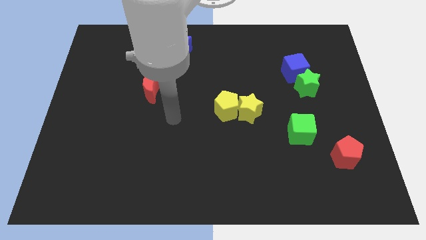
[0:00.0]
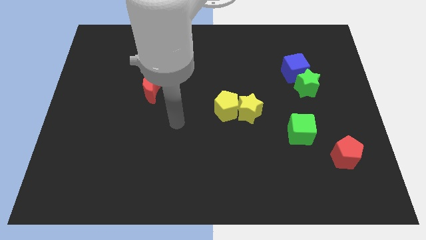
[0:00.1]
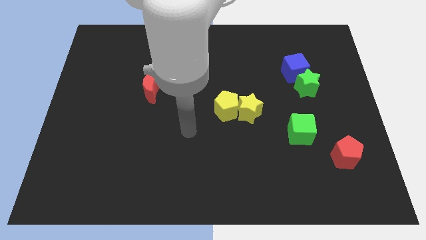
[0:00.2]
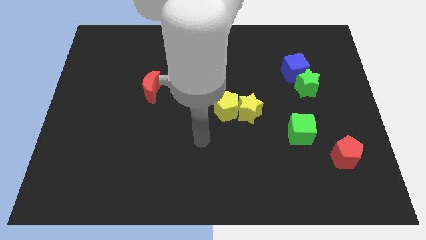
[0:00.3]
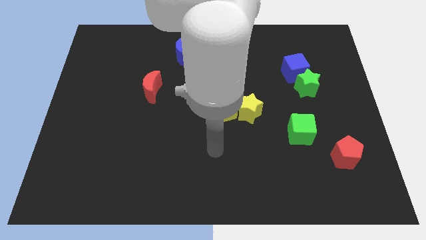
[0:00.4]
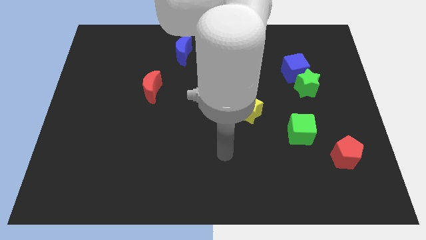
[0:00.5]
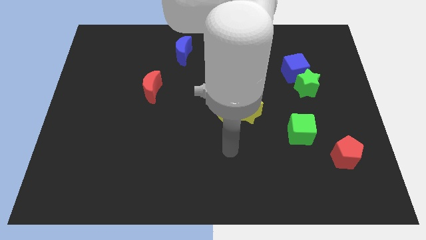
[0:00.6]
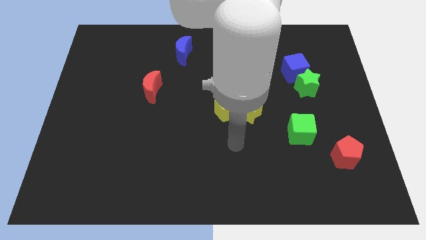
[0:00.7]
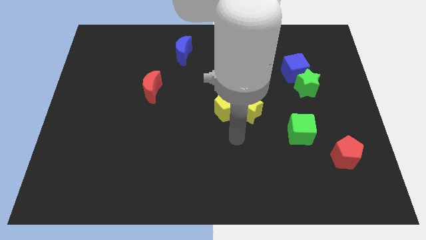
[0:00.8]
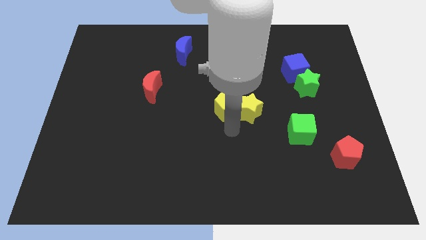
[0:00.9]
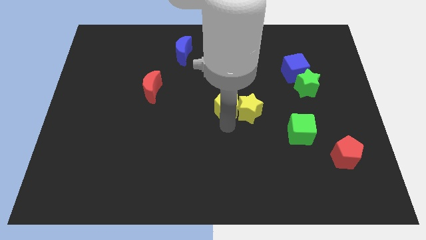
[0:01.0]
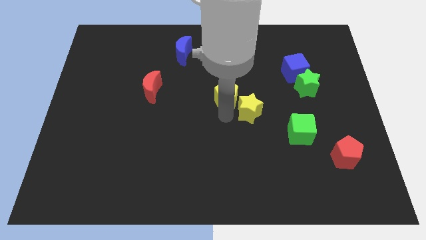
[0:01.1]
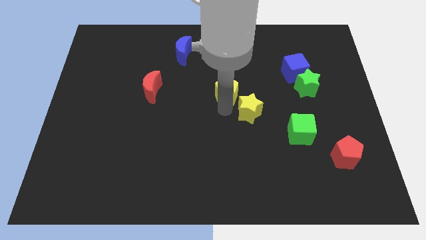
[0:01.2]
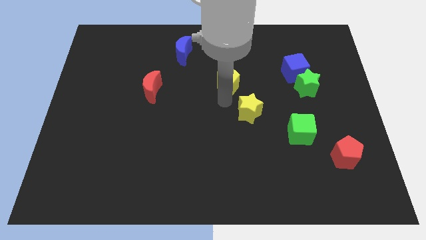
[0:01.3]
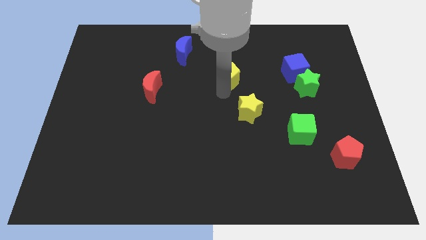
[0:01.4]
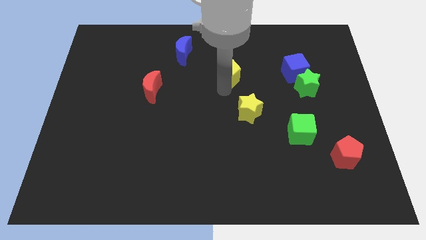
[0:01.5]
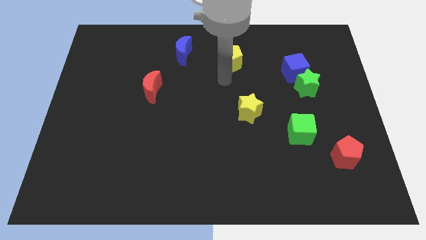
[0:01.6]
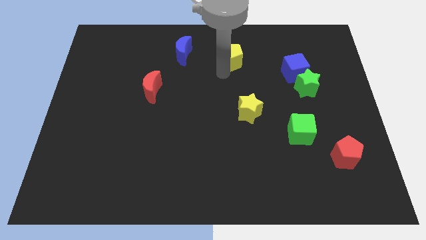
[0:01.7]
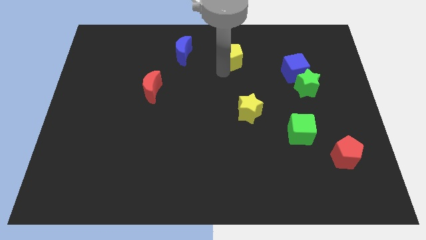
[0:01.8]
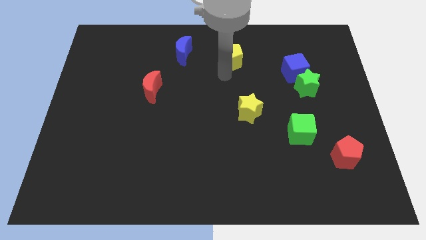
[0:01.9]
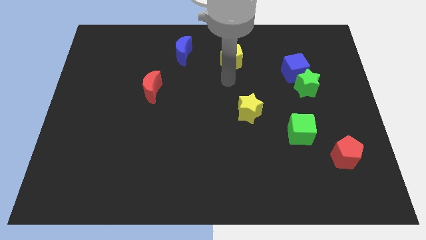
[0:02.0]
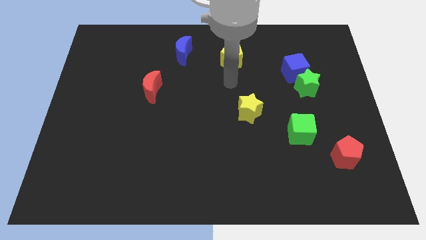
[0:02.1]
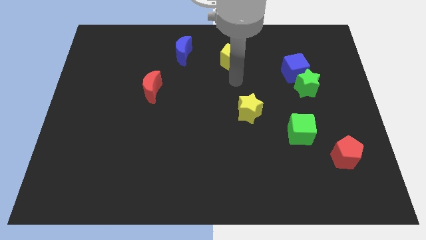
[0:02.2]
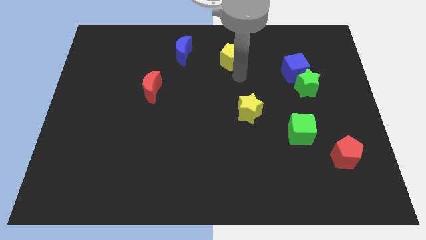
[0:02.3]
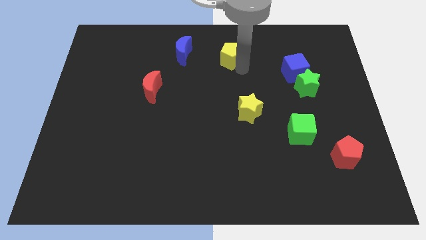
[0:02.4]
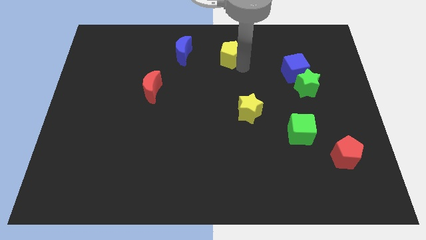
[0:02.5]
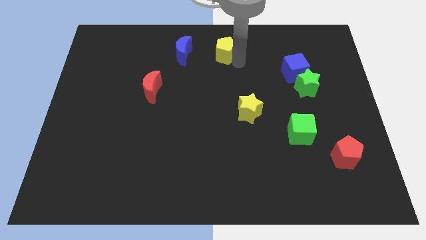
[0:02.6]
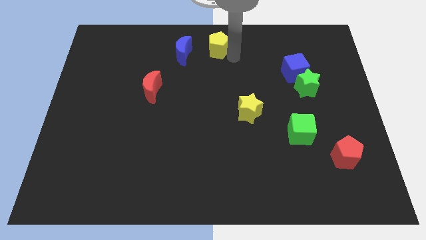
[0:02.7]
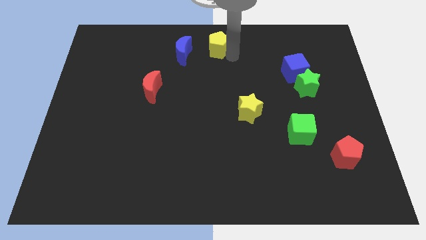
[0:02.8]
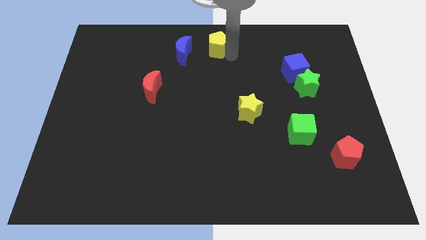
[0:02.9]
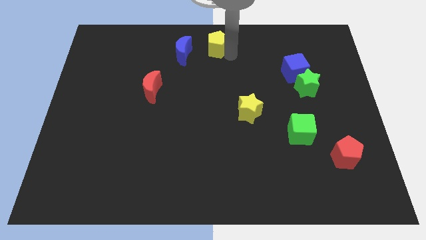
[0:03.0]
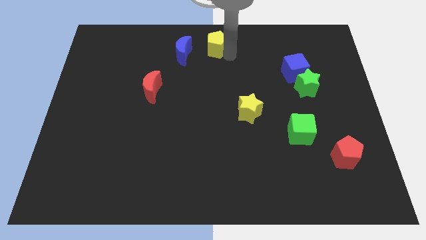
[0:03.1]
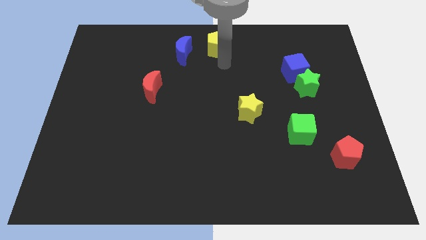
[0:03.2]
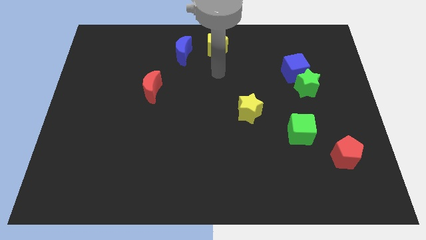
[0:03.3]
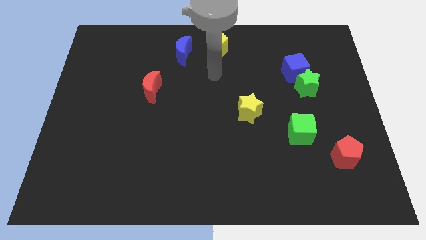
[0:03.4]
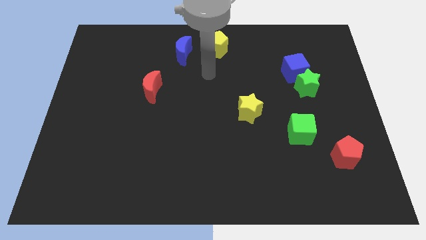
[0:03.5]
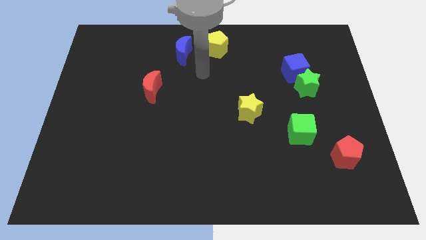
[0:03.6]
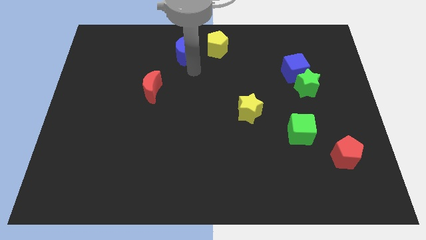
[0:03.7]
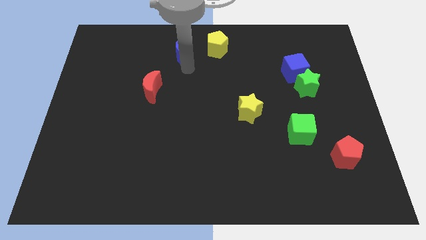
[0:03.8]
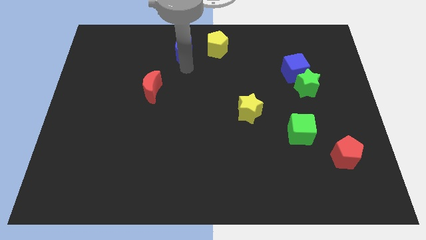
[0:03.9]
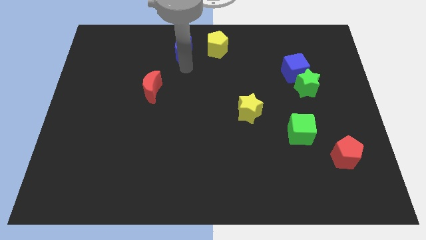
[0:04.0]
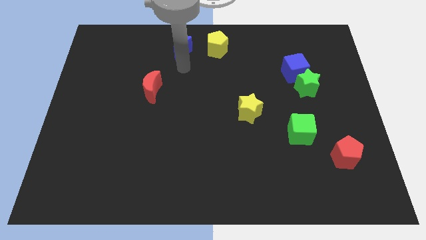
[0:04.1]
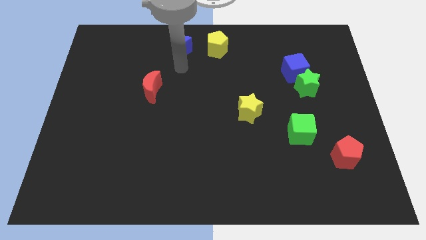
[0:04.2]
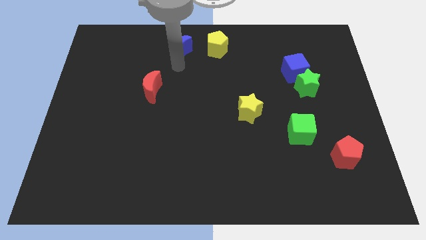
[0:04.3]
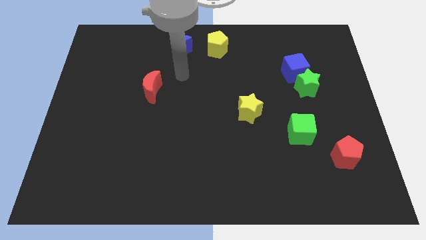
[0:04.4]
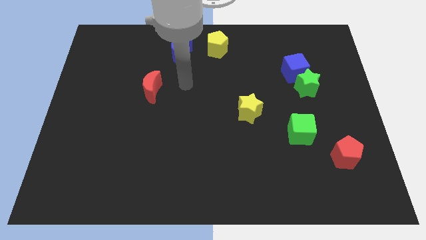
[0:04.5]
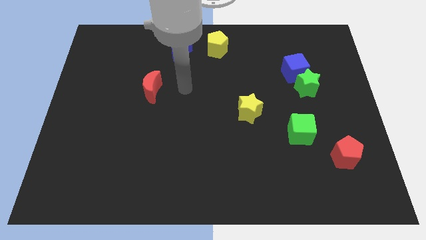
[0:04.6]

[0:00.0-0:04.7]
move the yellow pentagon to the right of the blue crescent

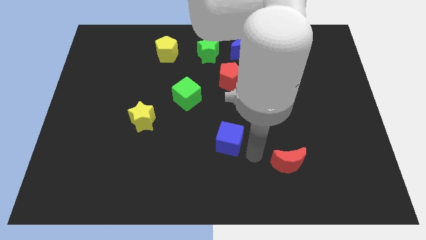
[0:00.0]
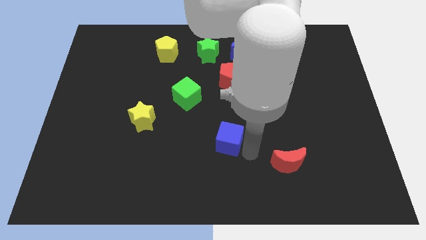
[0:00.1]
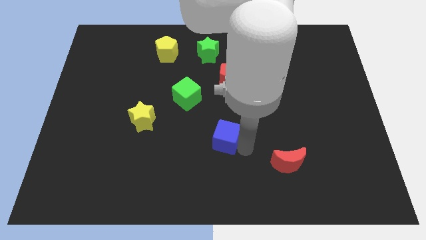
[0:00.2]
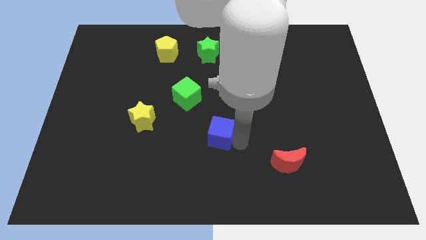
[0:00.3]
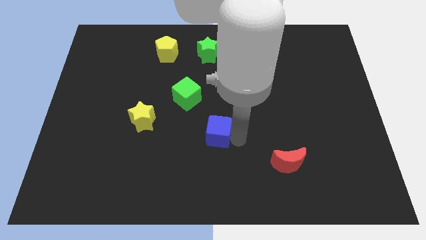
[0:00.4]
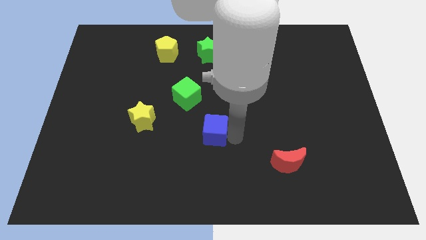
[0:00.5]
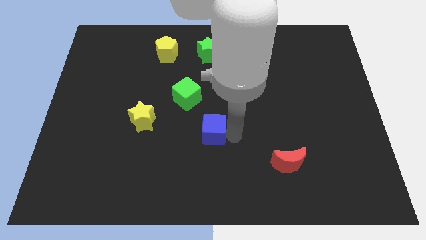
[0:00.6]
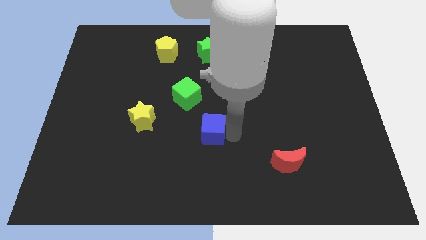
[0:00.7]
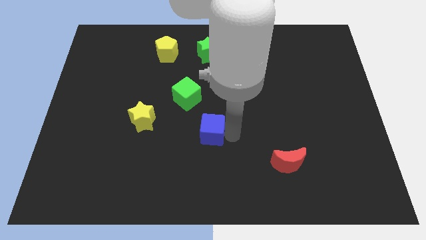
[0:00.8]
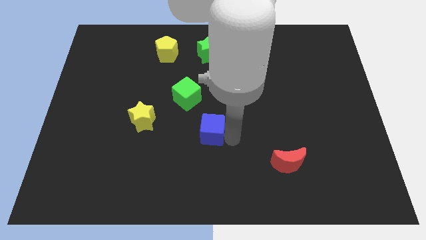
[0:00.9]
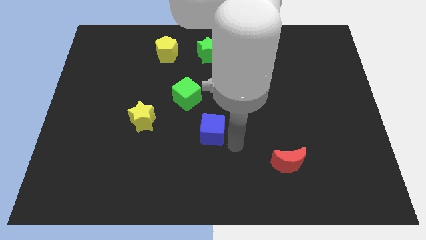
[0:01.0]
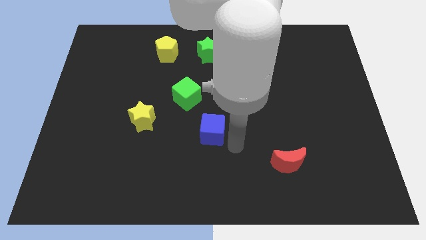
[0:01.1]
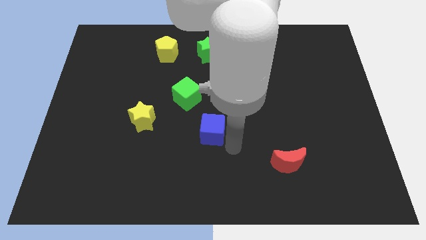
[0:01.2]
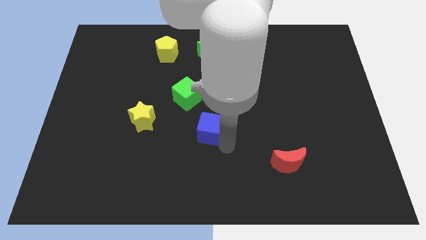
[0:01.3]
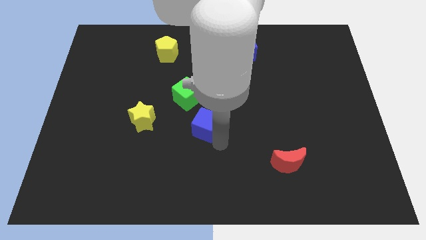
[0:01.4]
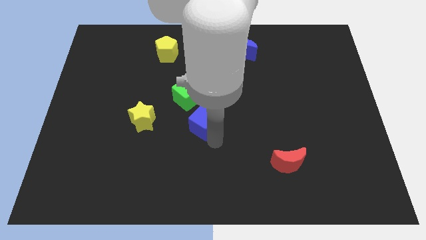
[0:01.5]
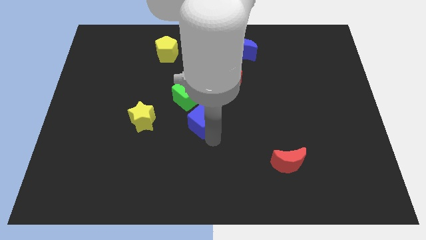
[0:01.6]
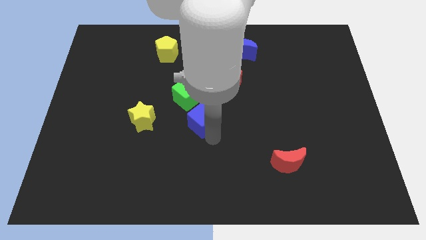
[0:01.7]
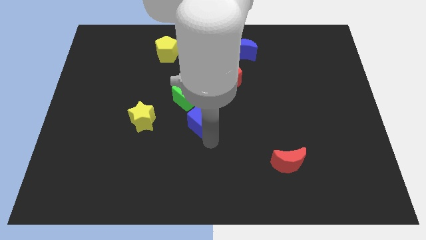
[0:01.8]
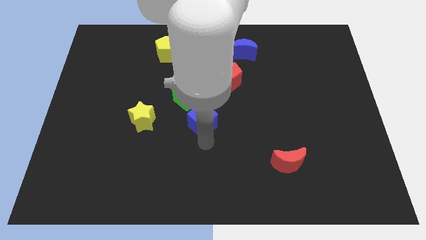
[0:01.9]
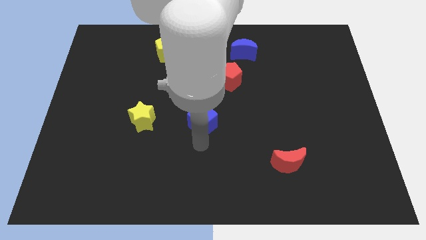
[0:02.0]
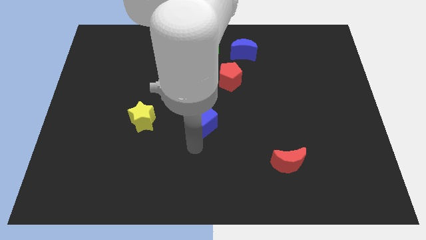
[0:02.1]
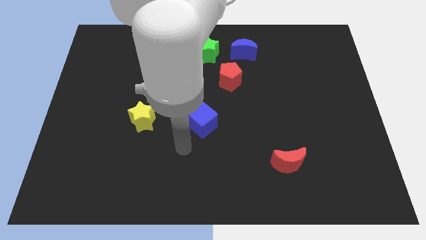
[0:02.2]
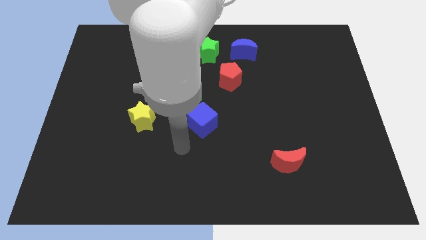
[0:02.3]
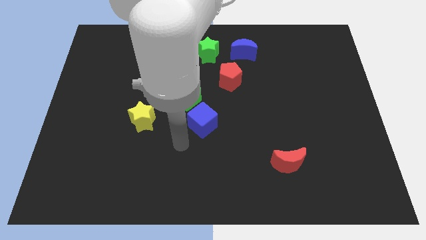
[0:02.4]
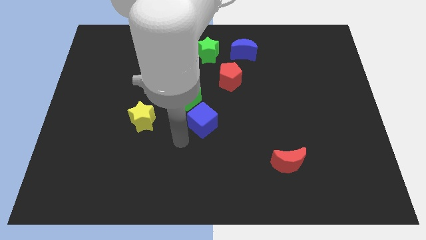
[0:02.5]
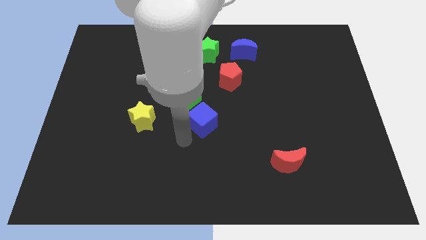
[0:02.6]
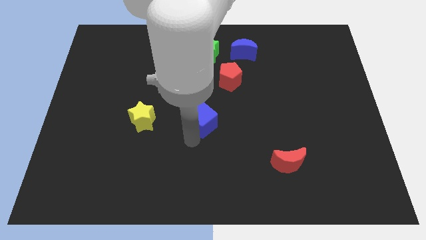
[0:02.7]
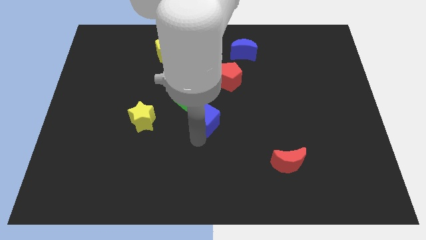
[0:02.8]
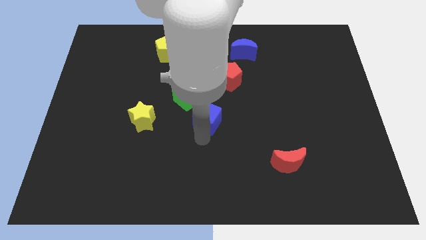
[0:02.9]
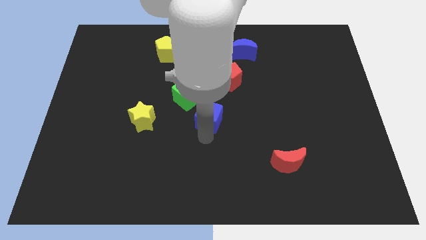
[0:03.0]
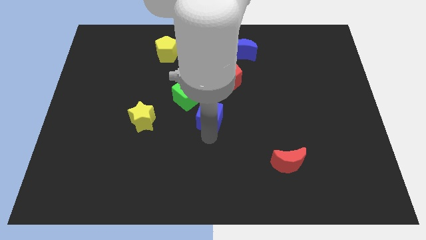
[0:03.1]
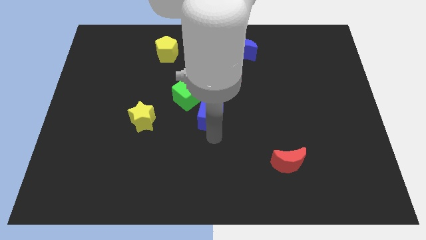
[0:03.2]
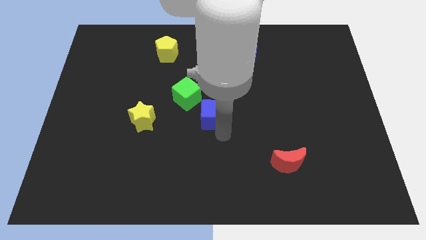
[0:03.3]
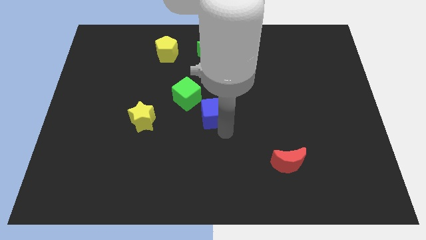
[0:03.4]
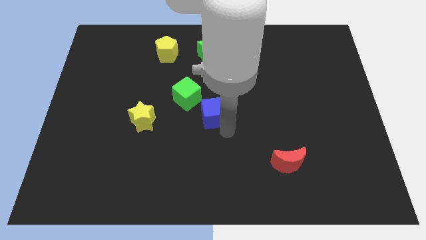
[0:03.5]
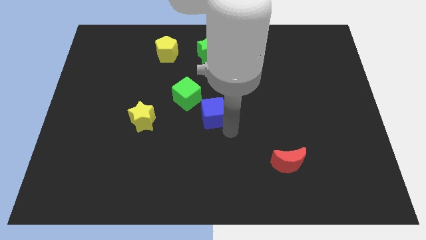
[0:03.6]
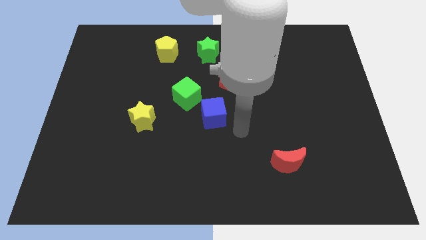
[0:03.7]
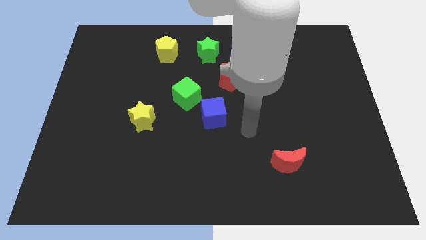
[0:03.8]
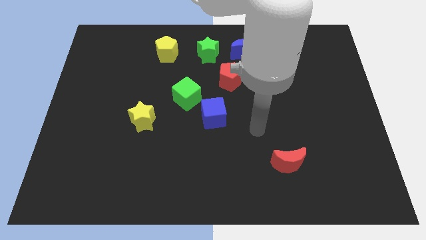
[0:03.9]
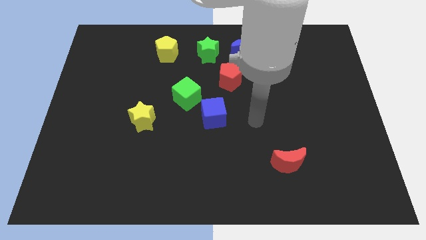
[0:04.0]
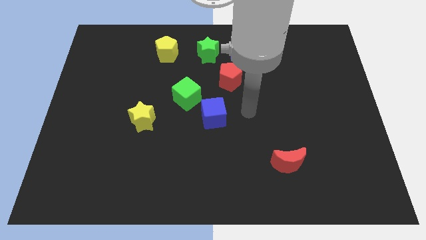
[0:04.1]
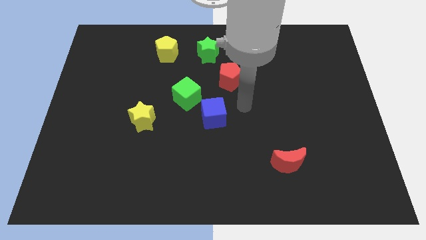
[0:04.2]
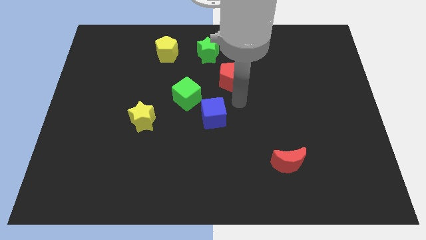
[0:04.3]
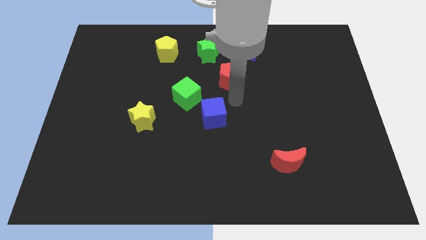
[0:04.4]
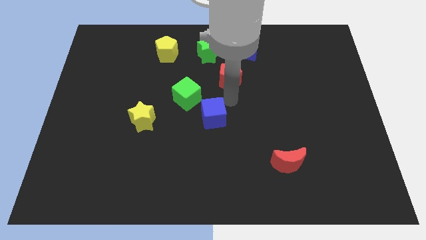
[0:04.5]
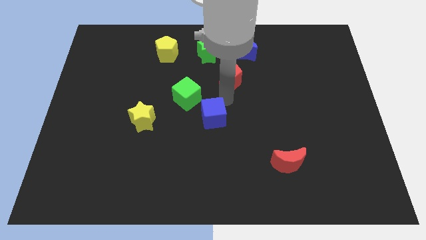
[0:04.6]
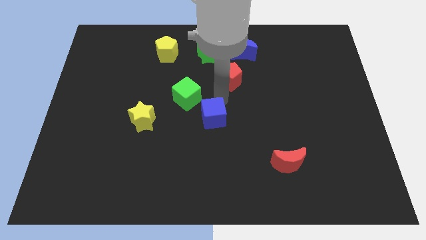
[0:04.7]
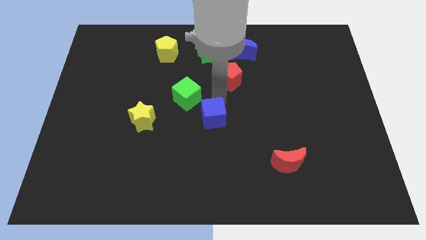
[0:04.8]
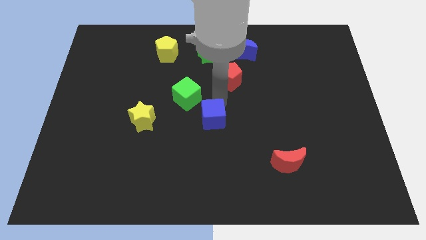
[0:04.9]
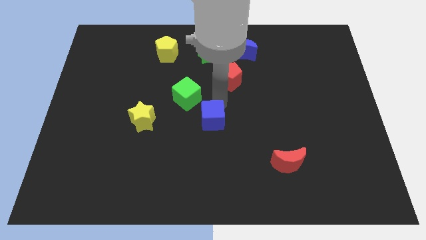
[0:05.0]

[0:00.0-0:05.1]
place the blue cube at center of the board
